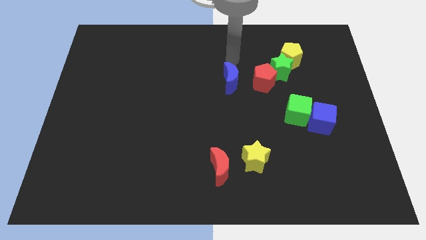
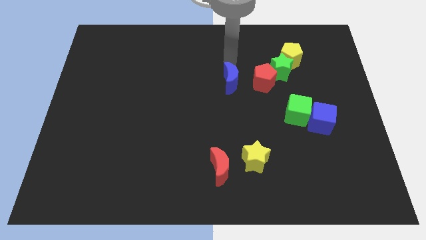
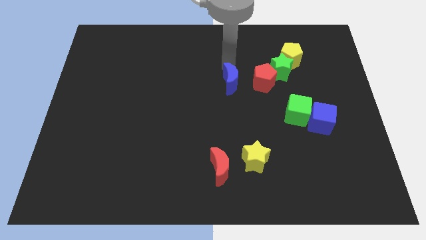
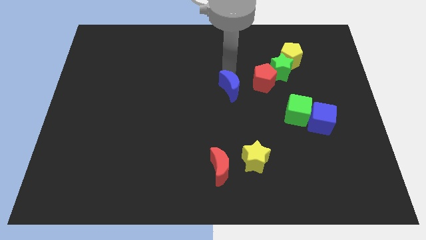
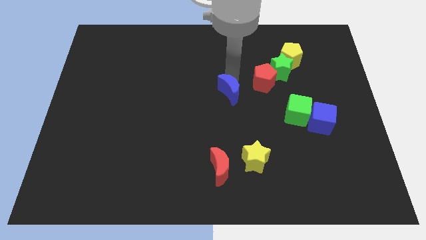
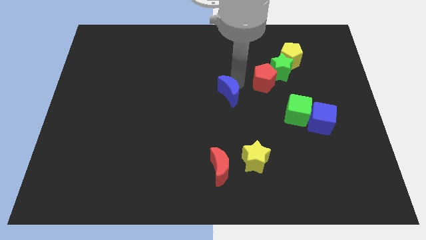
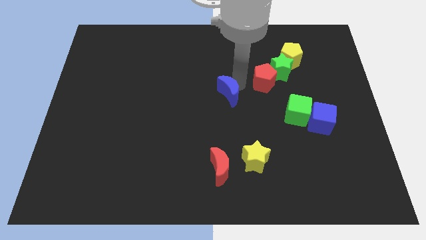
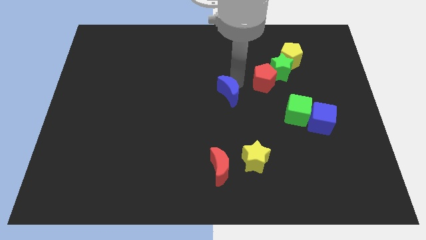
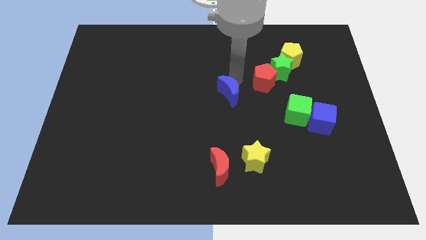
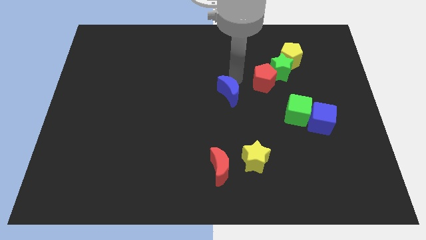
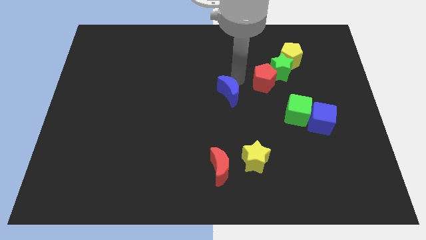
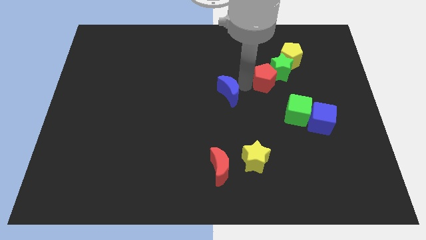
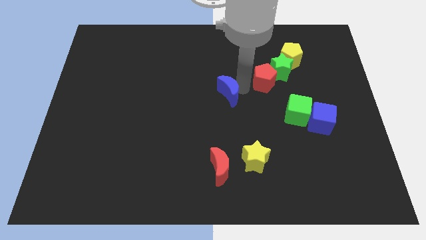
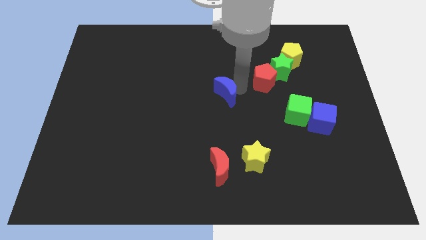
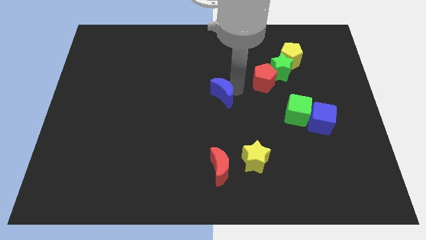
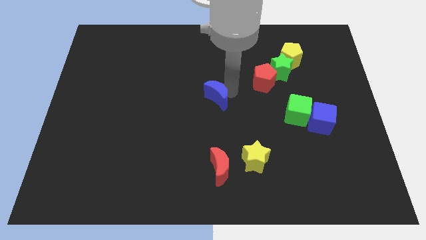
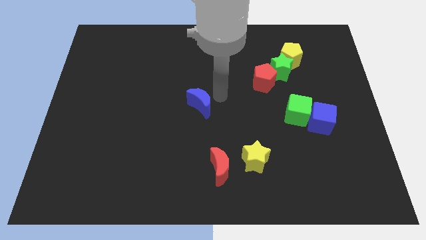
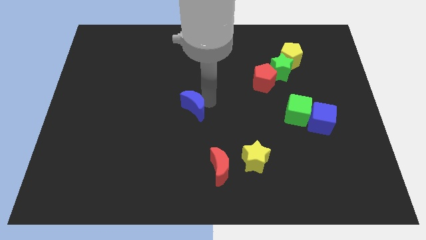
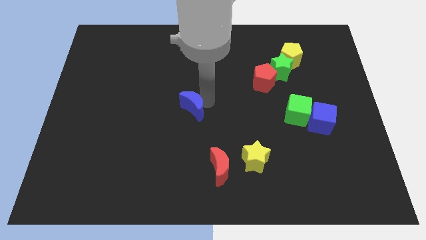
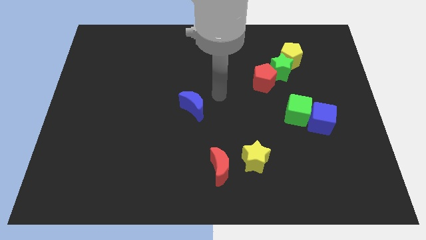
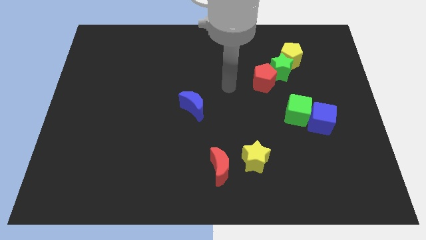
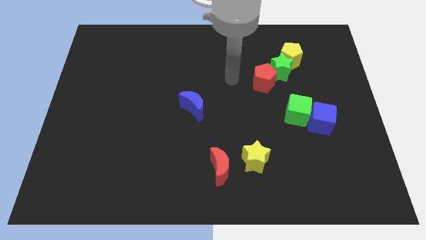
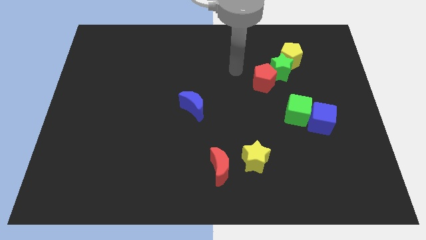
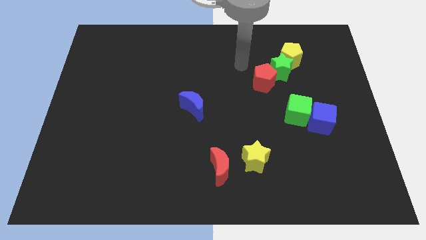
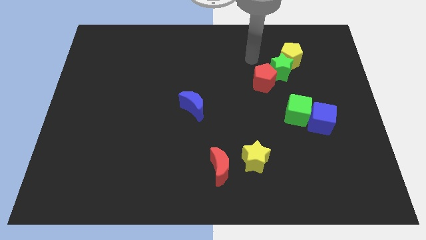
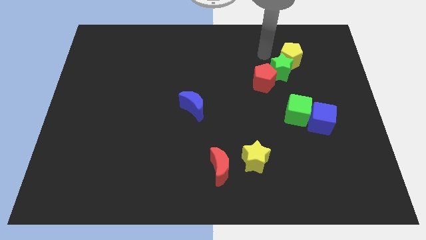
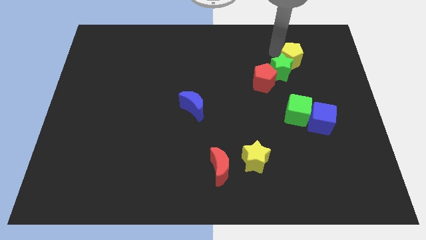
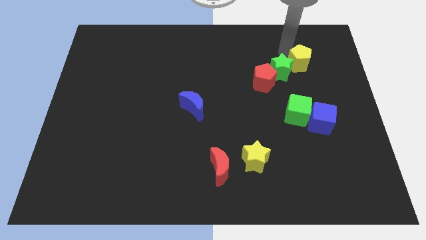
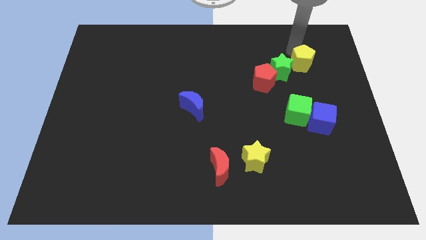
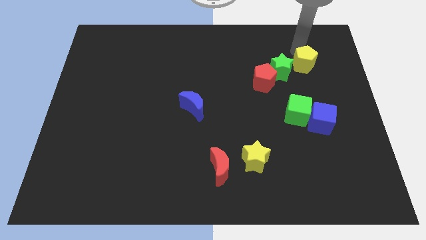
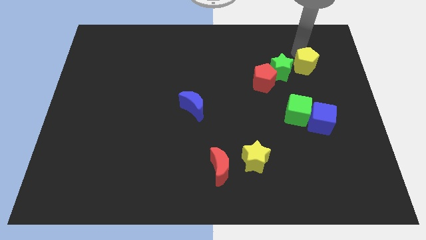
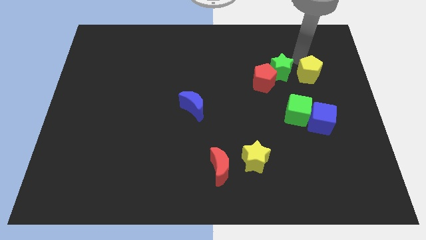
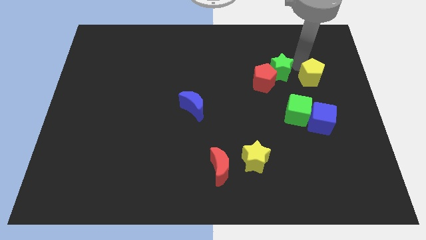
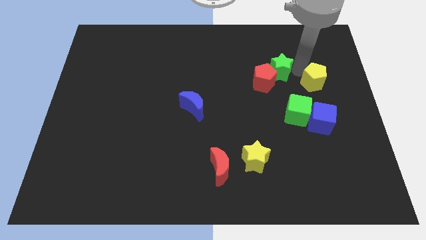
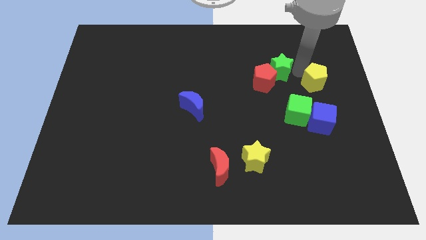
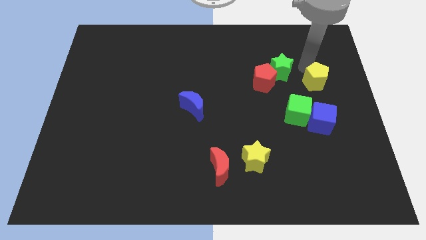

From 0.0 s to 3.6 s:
push the blue moon downwards and yellow pentagon above green cube

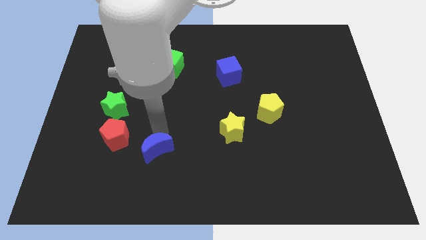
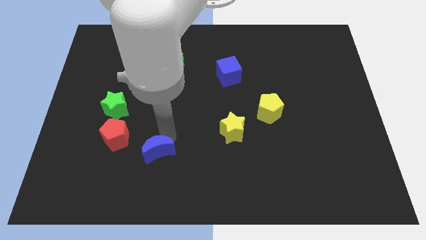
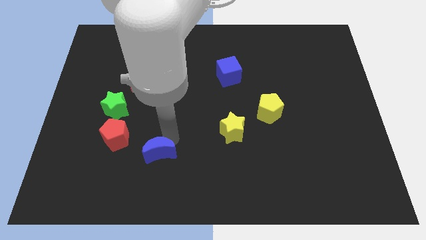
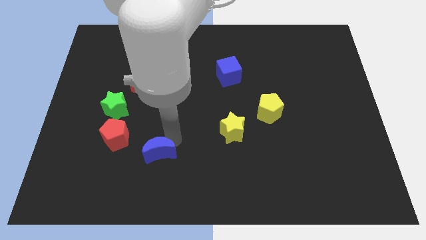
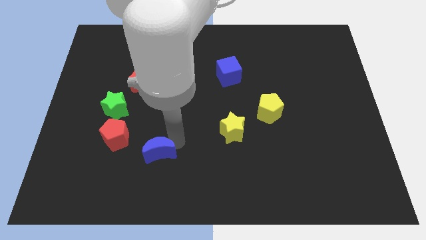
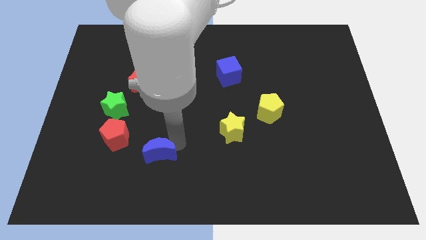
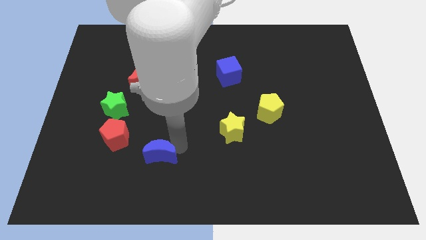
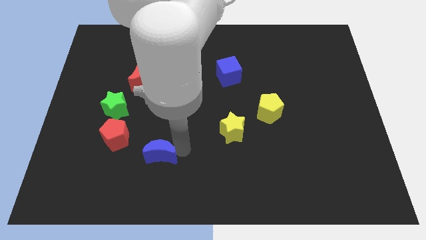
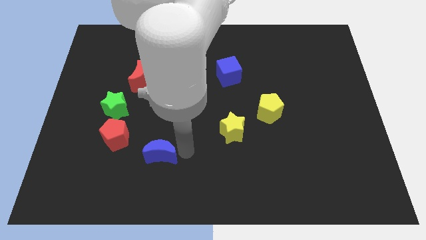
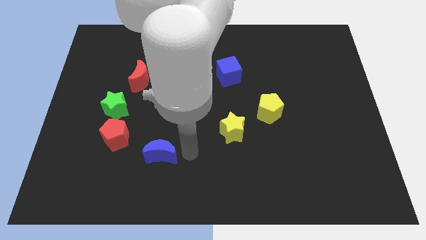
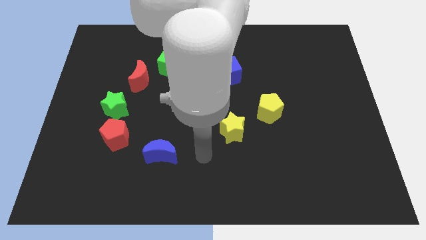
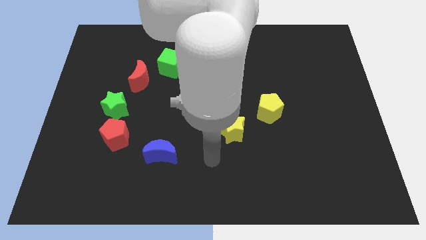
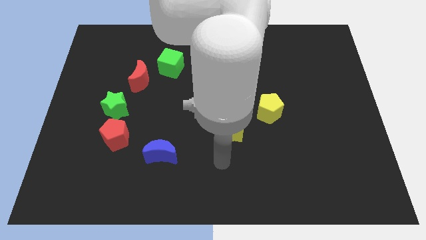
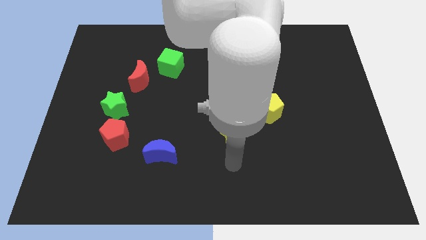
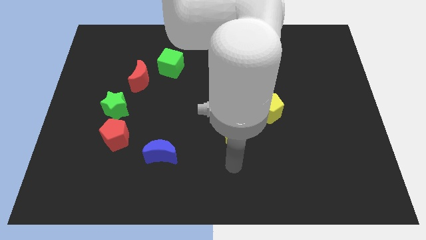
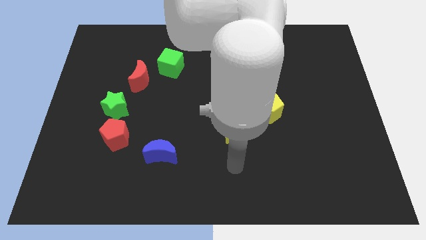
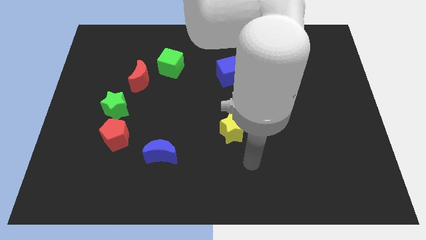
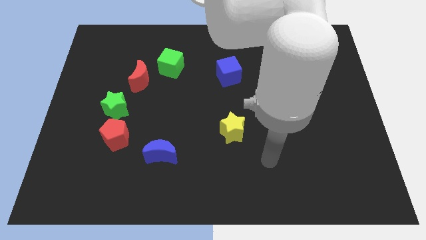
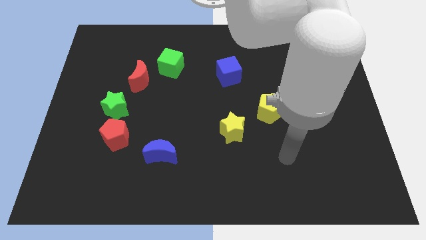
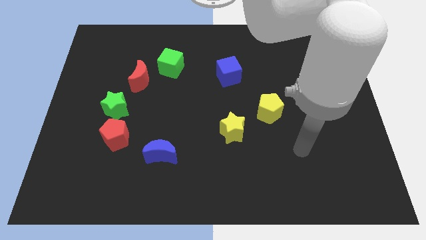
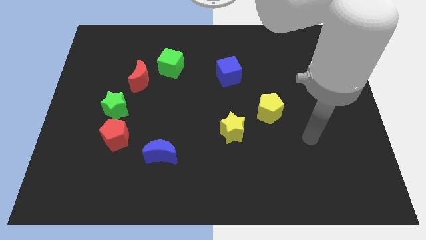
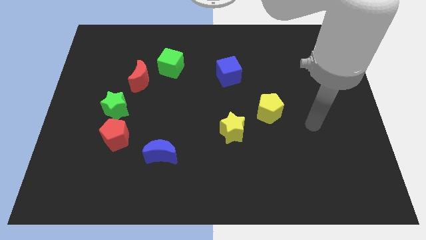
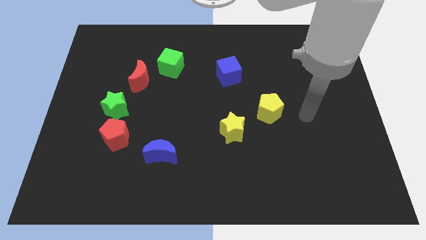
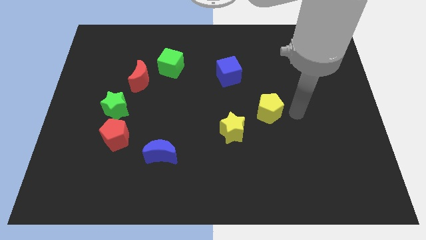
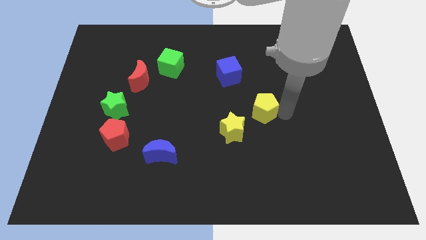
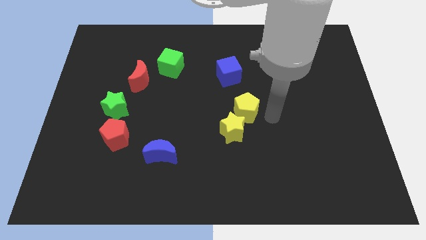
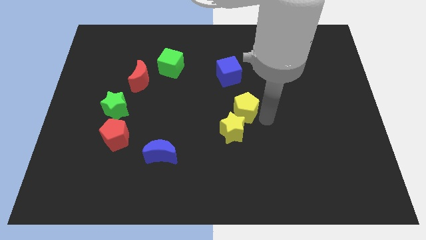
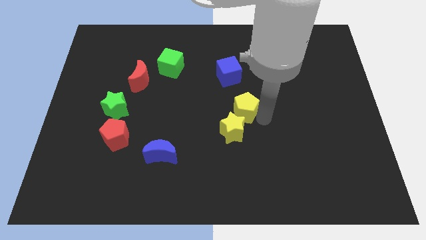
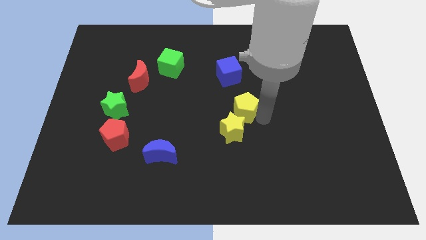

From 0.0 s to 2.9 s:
push yellow pentagon into yellow star

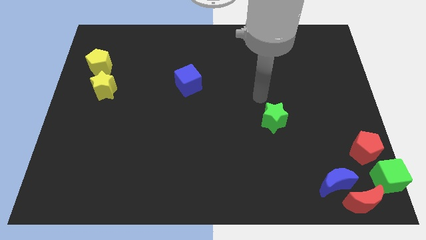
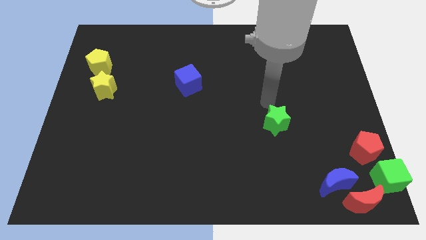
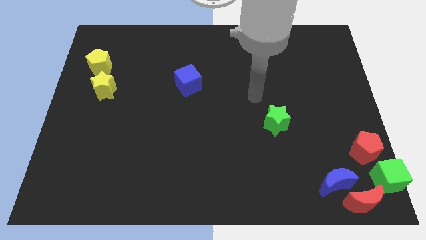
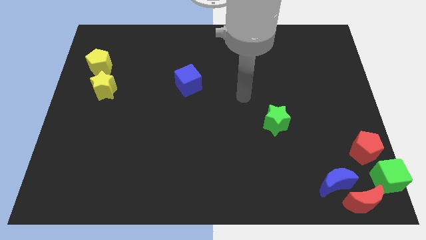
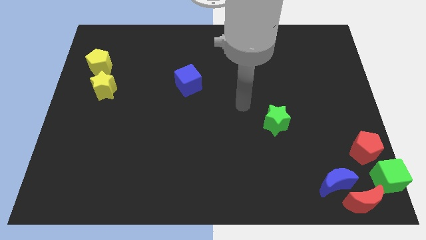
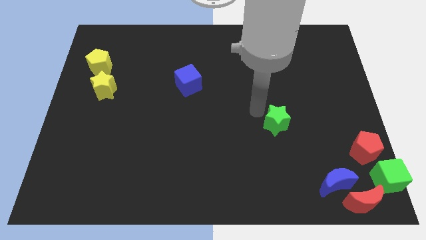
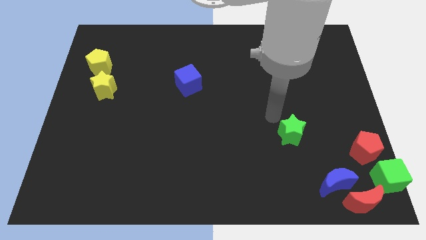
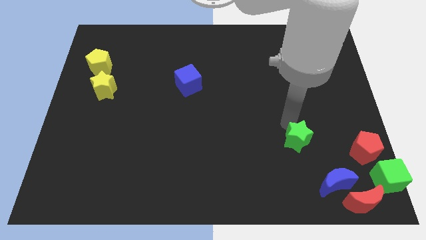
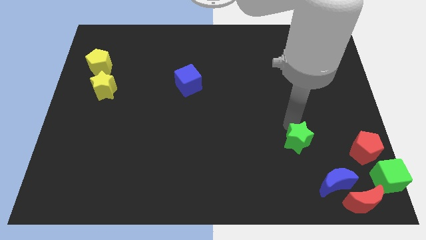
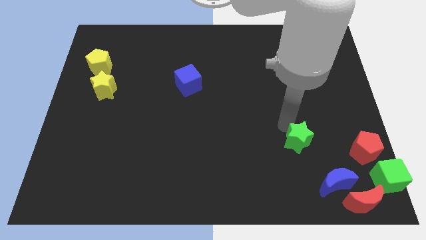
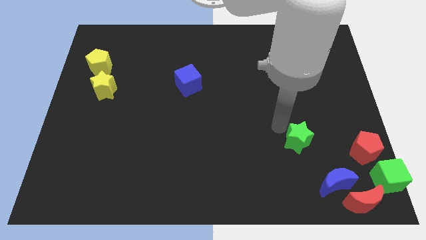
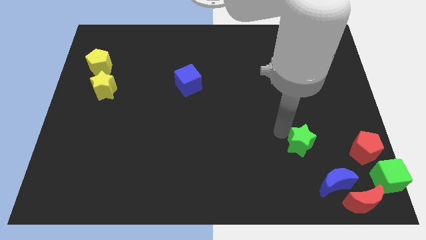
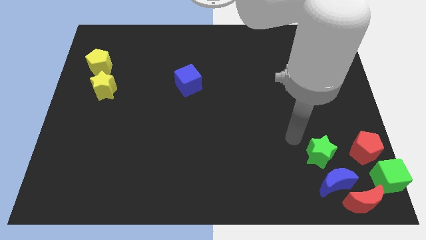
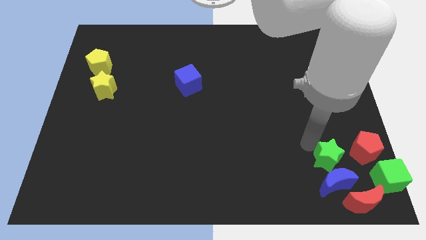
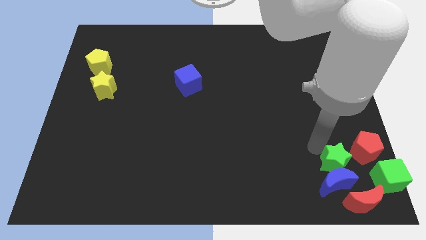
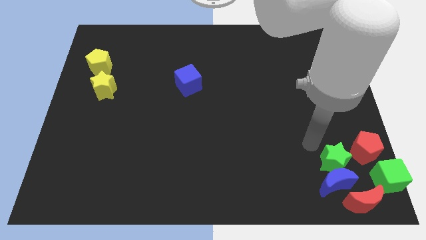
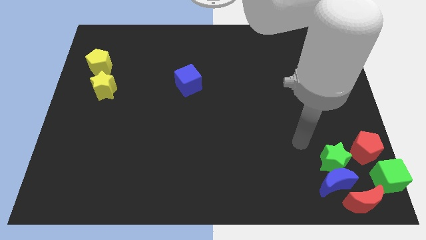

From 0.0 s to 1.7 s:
push the green star left to the red pentagon

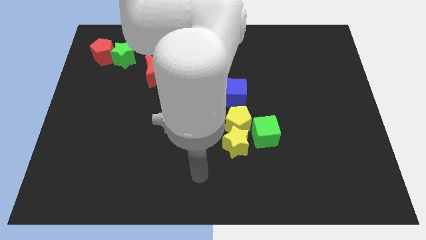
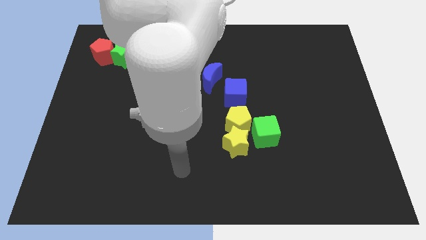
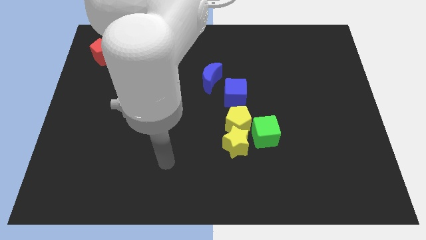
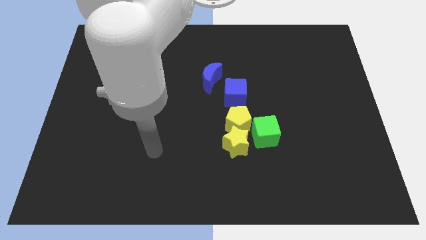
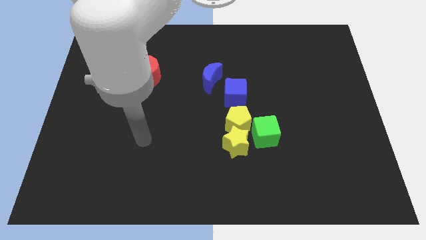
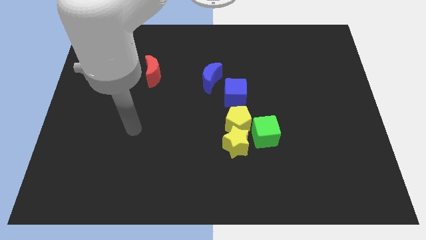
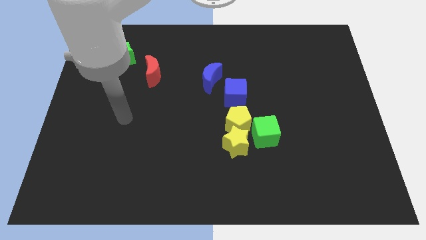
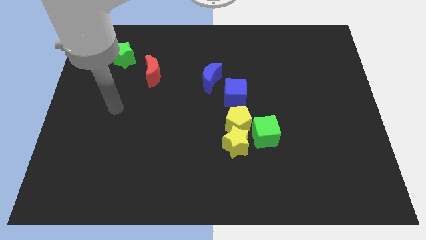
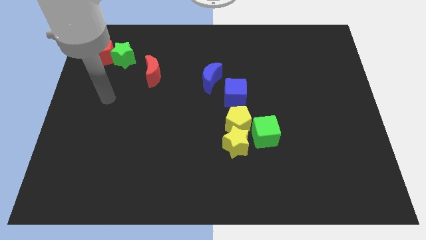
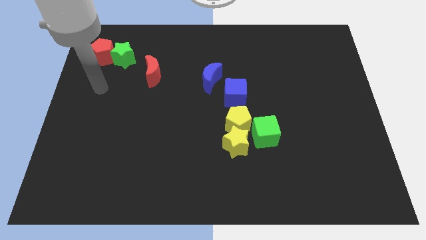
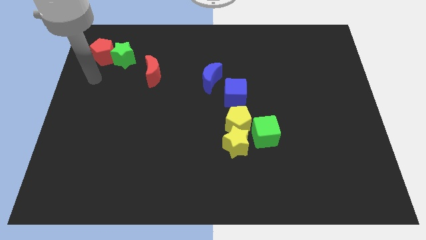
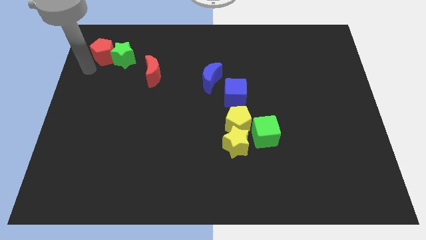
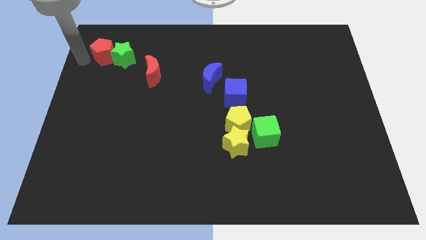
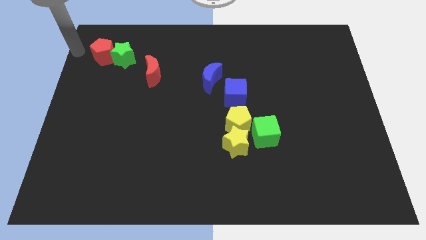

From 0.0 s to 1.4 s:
point your arm at the left side of the red pentagon
